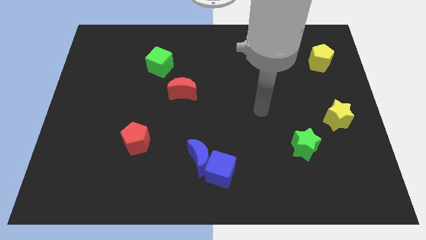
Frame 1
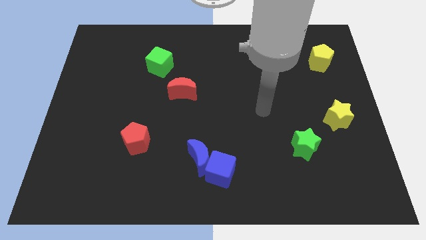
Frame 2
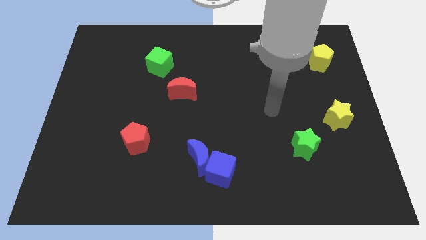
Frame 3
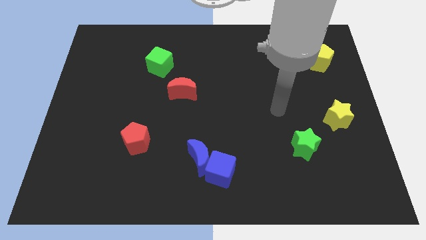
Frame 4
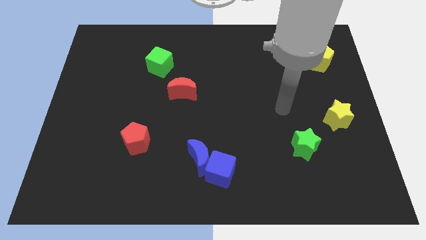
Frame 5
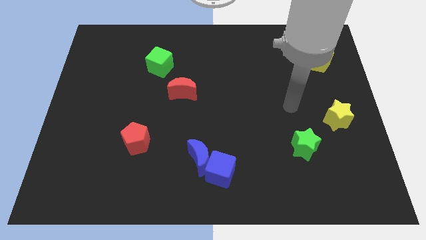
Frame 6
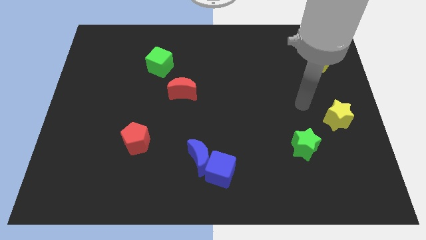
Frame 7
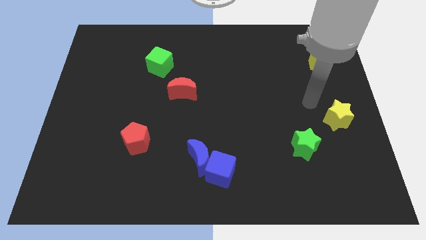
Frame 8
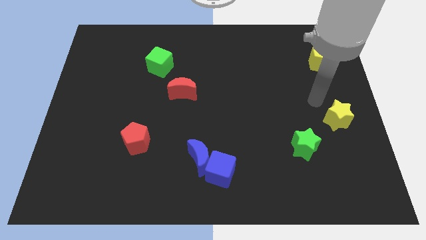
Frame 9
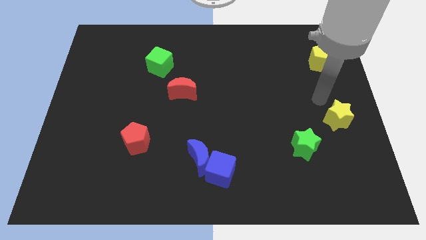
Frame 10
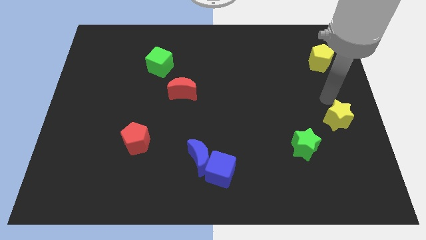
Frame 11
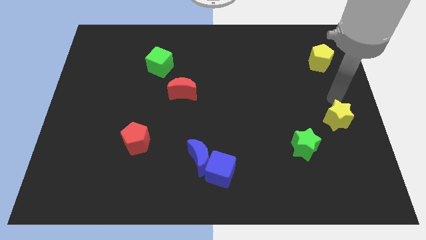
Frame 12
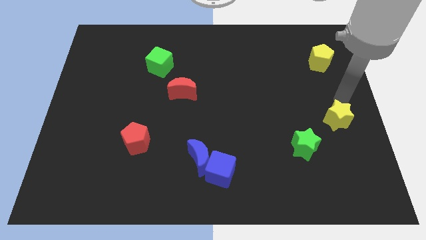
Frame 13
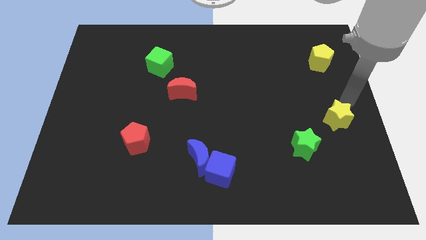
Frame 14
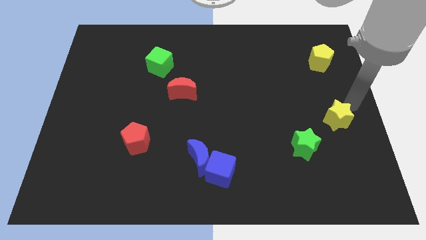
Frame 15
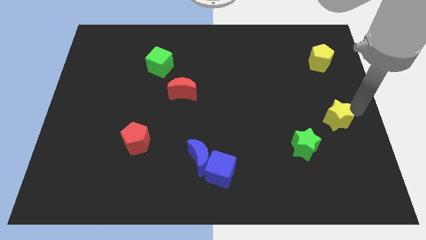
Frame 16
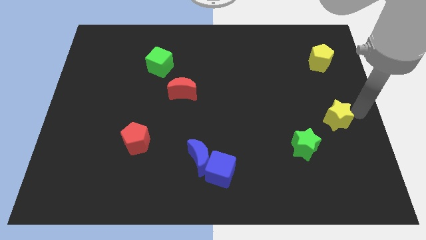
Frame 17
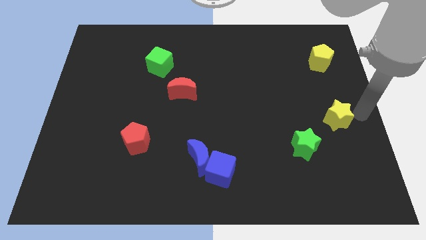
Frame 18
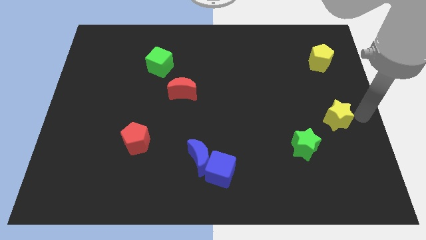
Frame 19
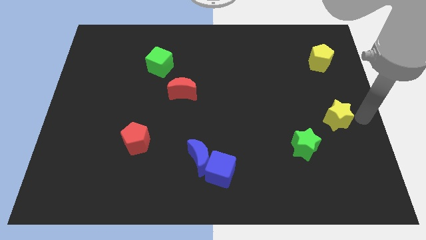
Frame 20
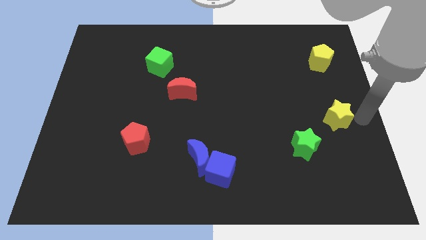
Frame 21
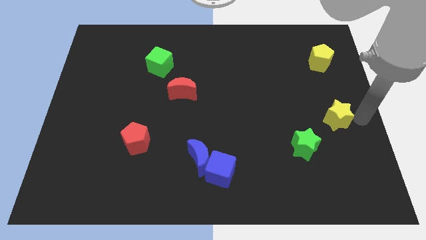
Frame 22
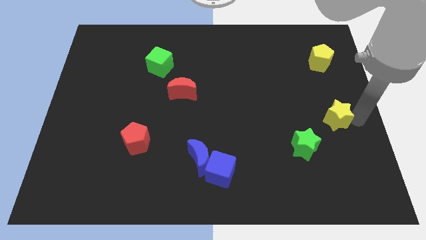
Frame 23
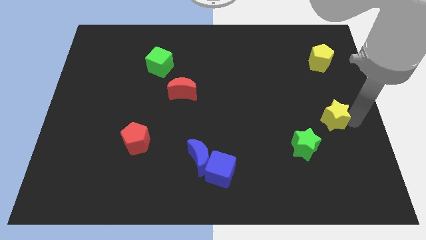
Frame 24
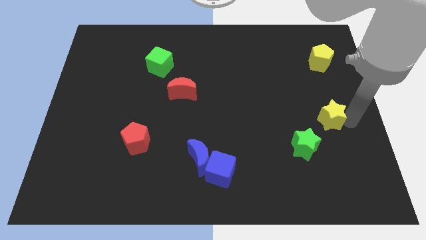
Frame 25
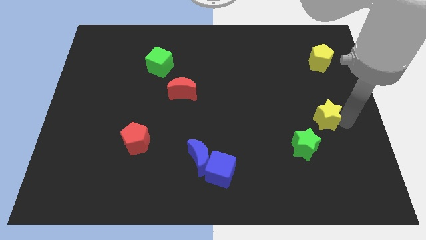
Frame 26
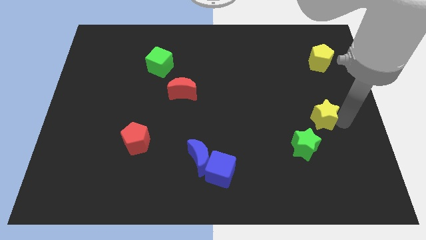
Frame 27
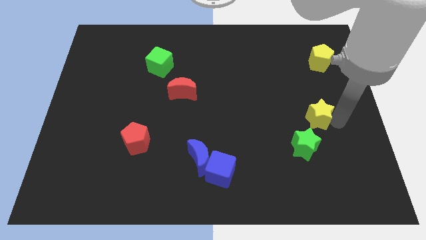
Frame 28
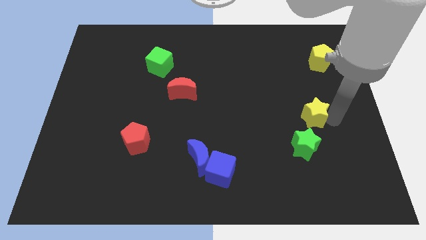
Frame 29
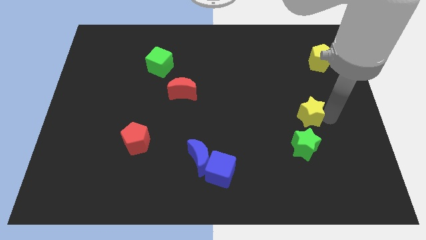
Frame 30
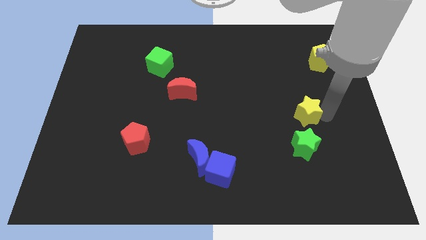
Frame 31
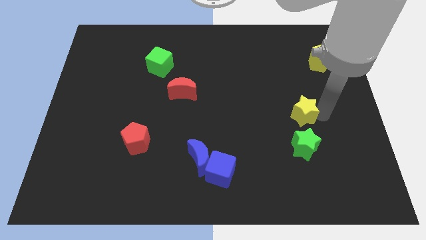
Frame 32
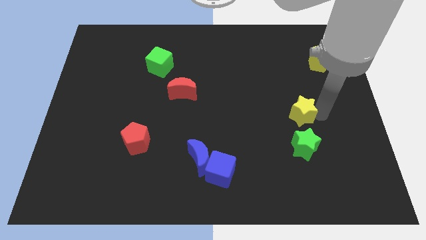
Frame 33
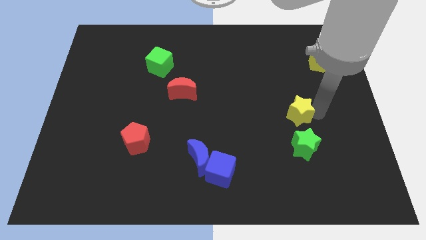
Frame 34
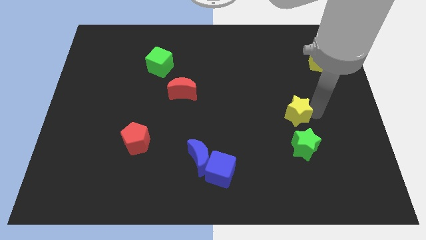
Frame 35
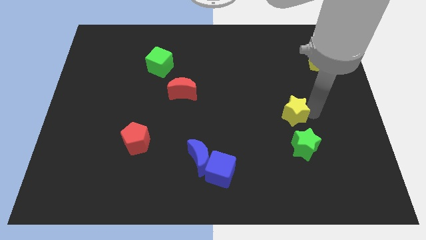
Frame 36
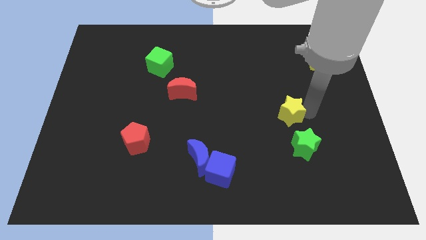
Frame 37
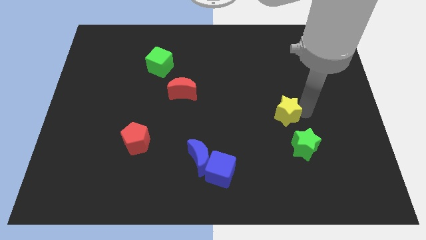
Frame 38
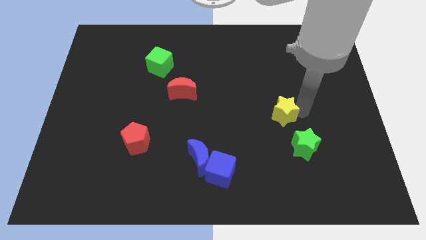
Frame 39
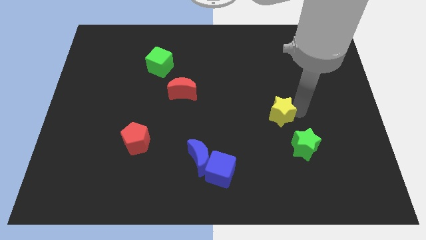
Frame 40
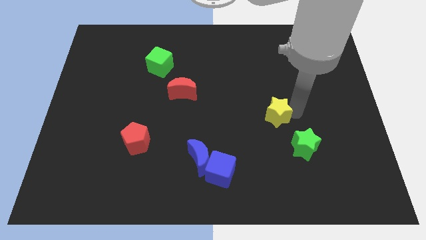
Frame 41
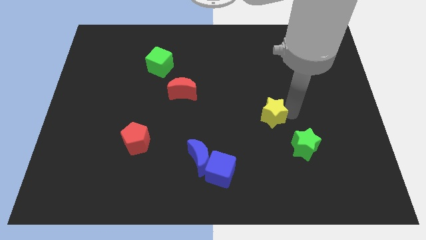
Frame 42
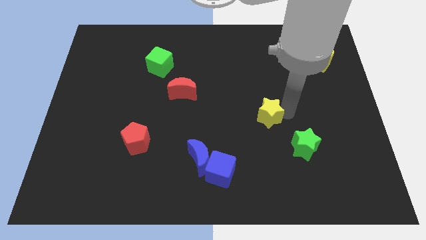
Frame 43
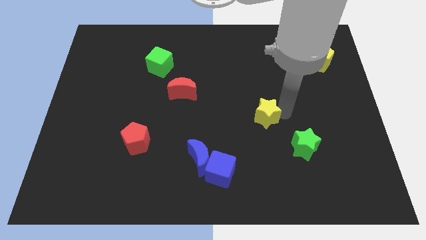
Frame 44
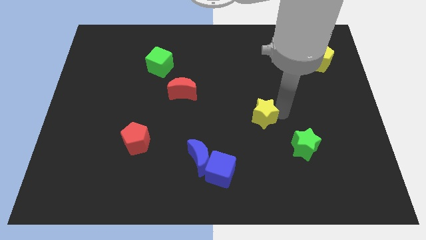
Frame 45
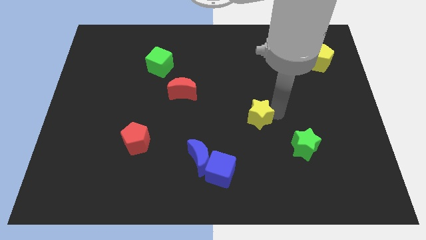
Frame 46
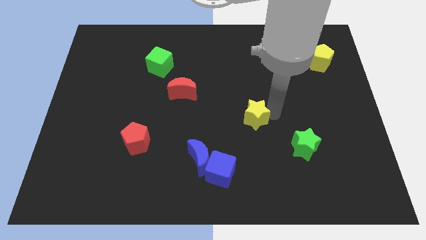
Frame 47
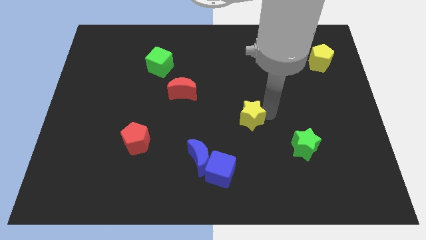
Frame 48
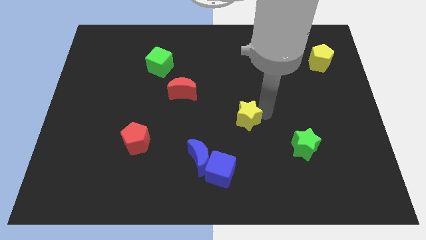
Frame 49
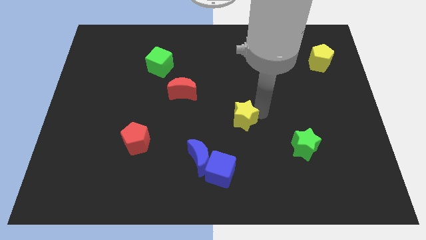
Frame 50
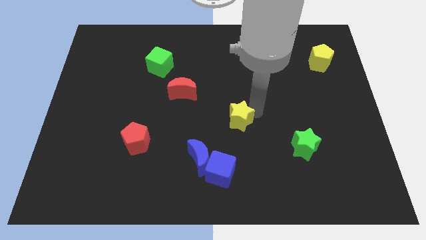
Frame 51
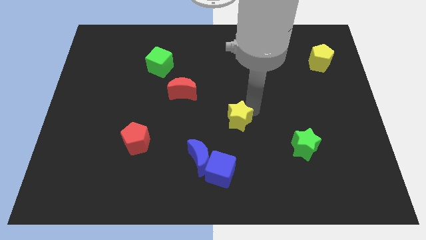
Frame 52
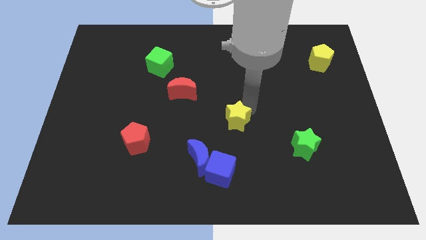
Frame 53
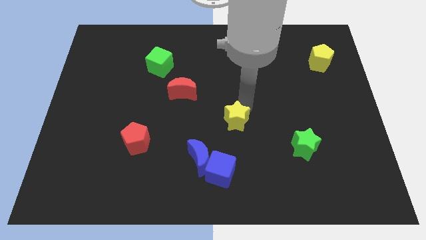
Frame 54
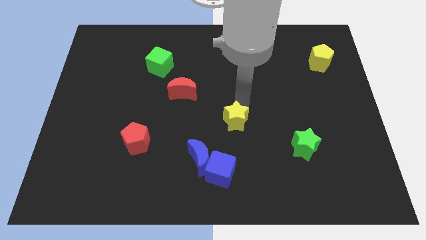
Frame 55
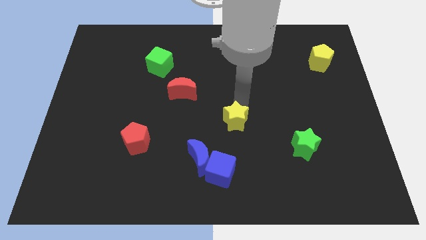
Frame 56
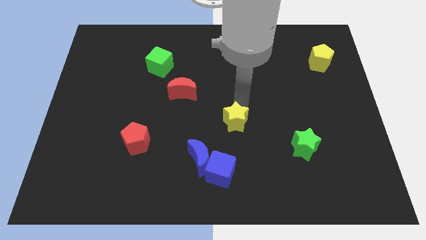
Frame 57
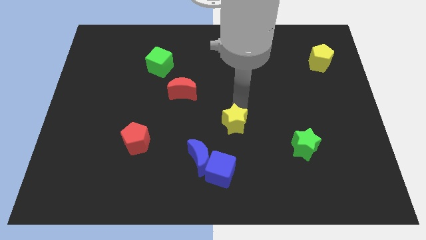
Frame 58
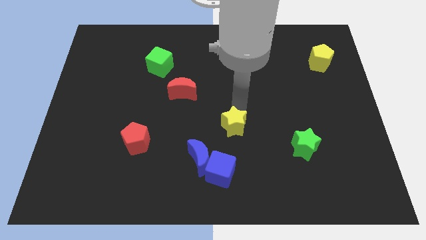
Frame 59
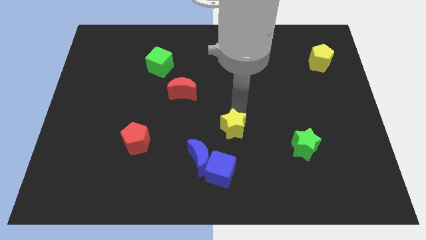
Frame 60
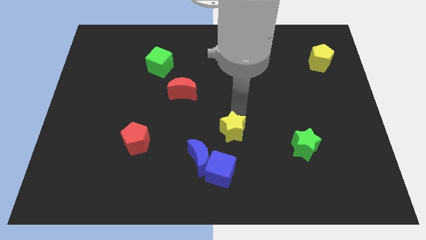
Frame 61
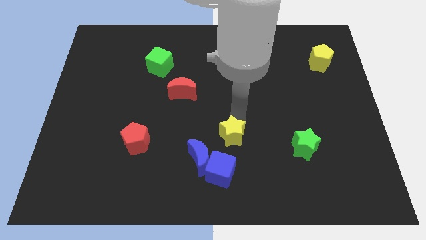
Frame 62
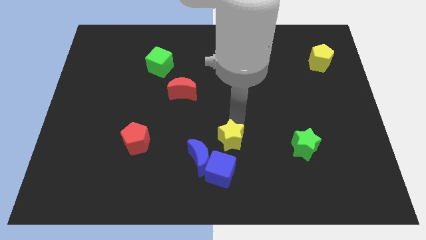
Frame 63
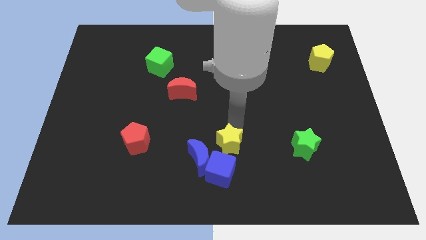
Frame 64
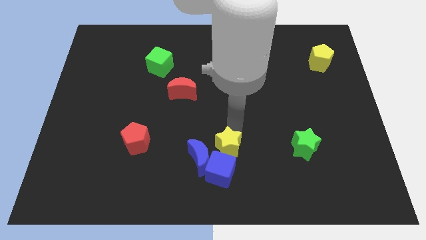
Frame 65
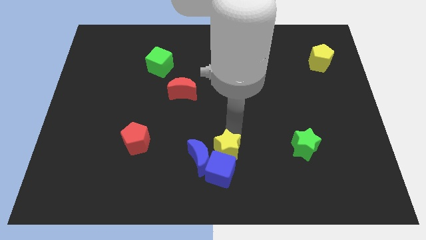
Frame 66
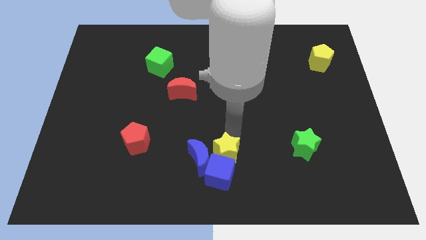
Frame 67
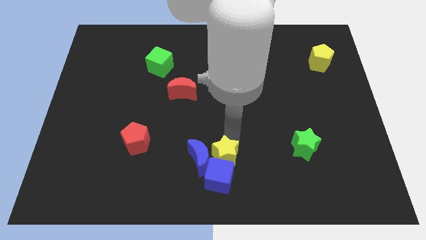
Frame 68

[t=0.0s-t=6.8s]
put the yellow star to the blue cube

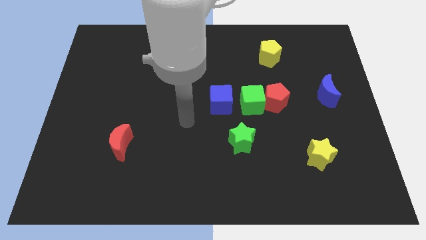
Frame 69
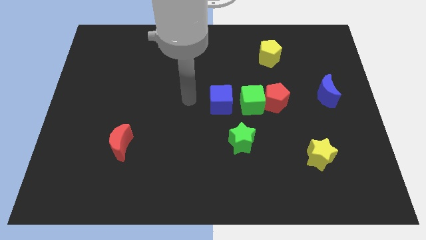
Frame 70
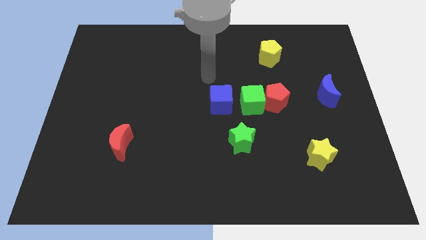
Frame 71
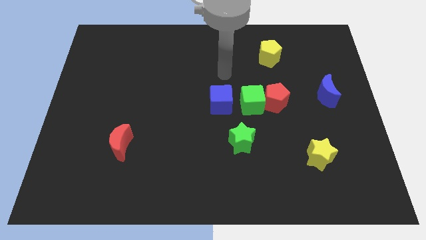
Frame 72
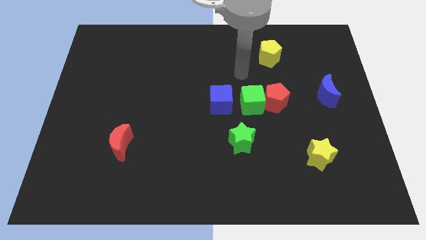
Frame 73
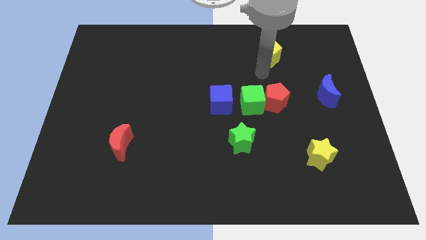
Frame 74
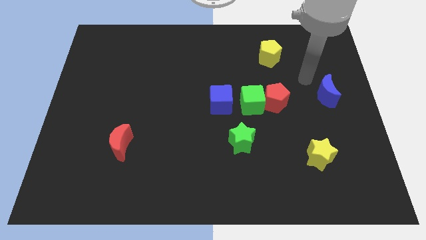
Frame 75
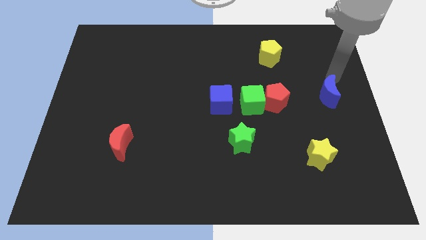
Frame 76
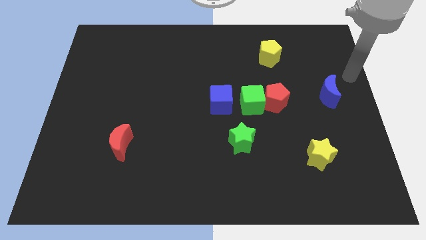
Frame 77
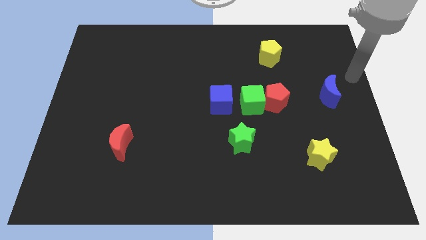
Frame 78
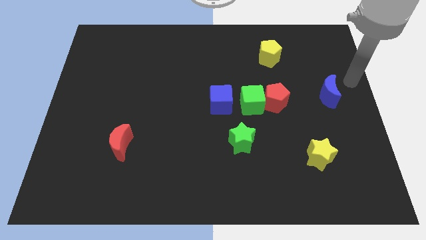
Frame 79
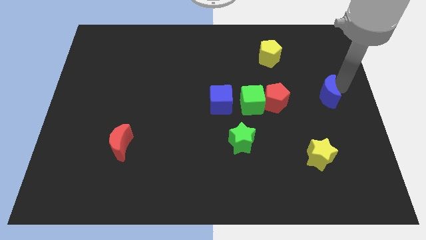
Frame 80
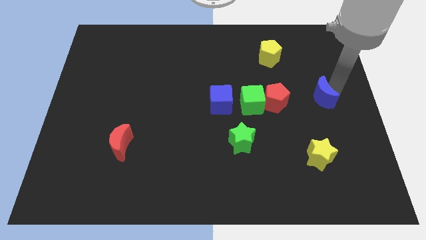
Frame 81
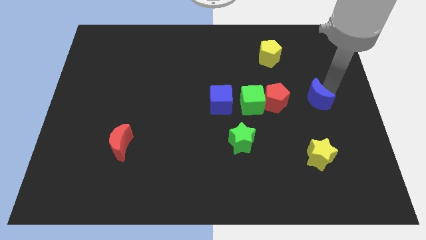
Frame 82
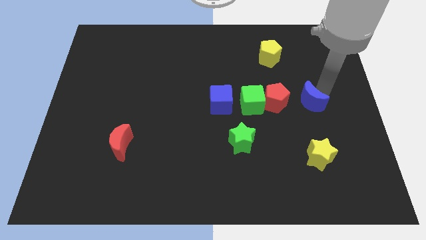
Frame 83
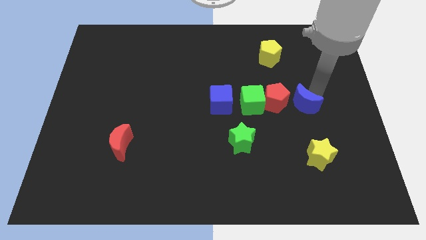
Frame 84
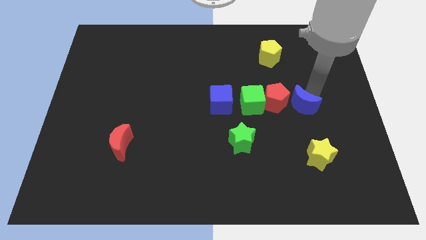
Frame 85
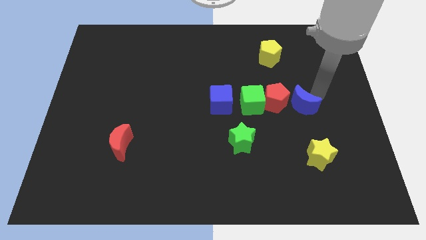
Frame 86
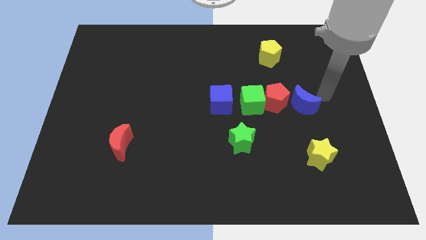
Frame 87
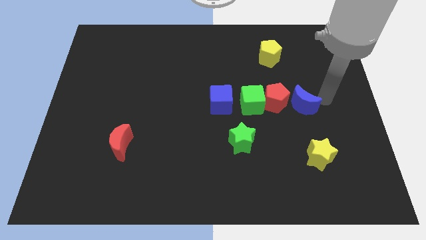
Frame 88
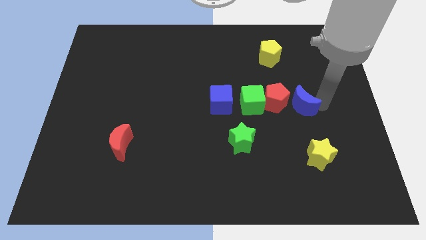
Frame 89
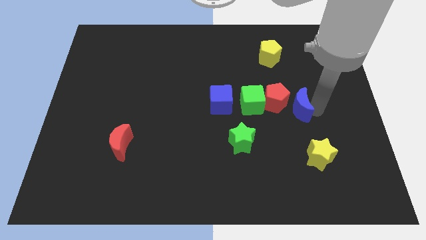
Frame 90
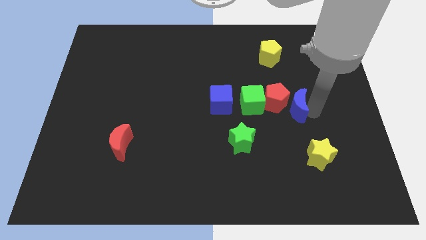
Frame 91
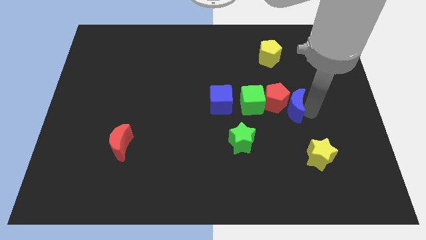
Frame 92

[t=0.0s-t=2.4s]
slide the blue moon to the red pentagon
